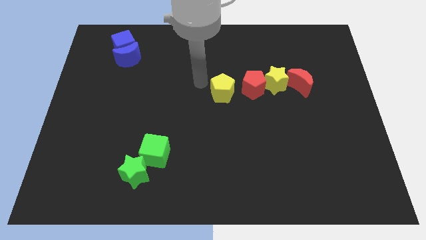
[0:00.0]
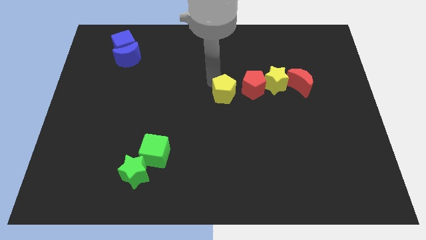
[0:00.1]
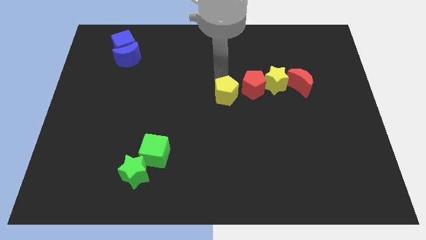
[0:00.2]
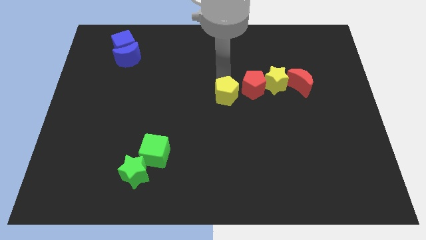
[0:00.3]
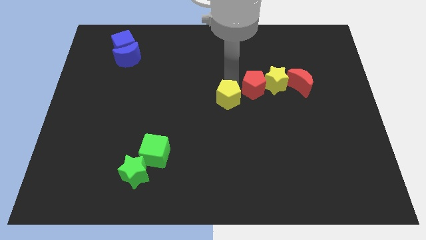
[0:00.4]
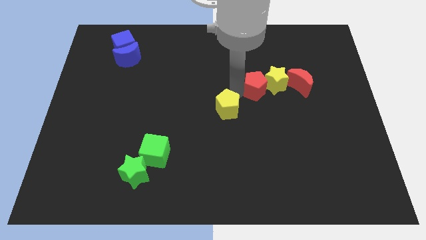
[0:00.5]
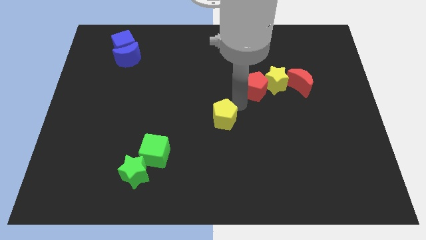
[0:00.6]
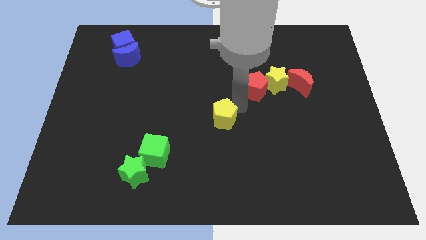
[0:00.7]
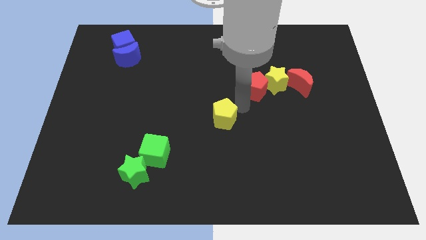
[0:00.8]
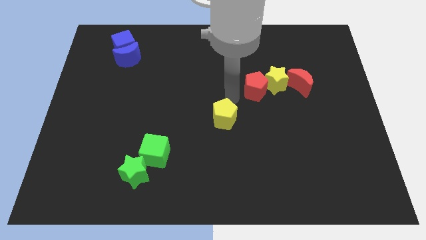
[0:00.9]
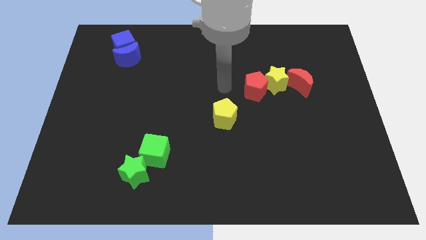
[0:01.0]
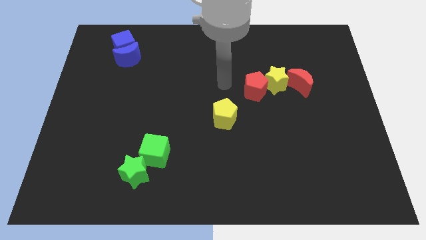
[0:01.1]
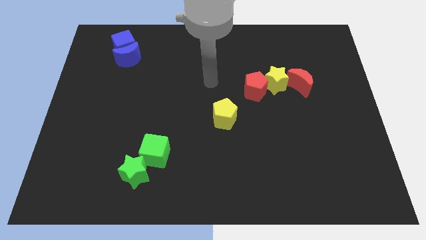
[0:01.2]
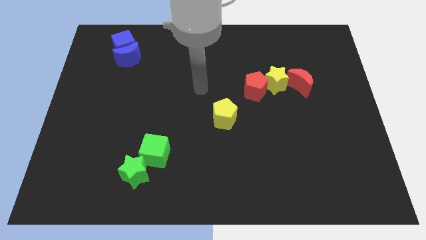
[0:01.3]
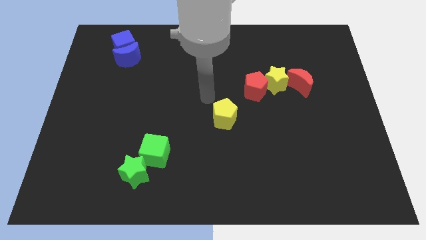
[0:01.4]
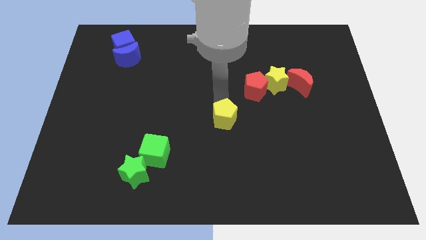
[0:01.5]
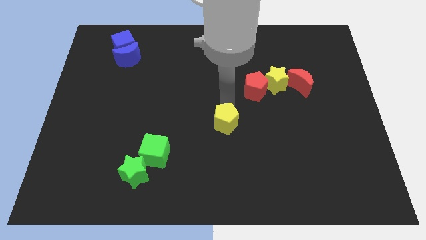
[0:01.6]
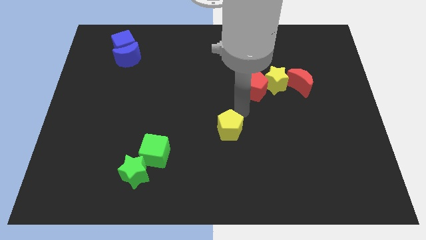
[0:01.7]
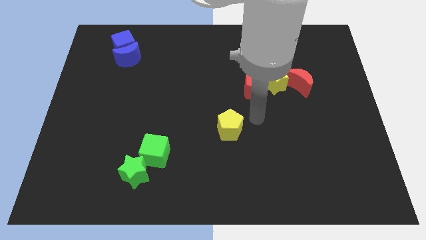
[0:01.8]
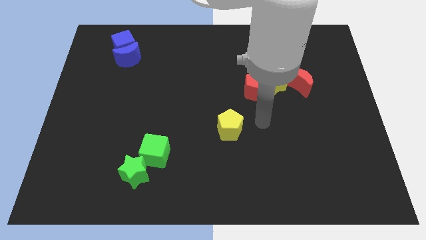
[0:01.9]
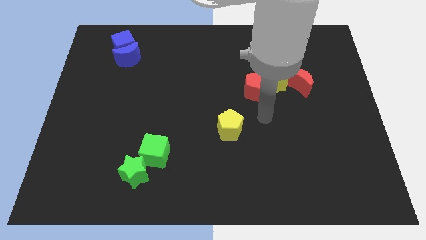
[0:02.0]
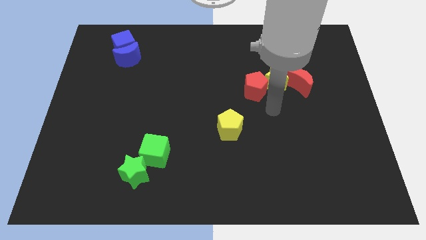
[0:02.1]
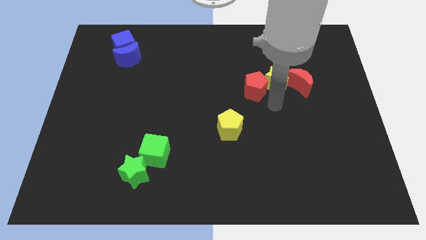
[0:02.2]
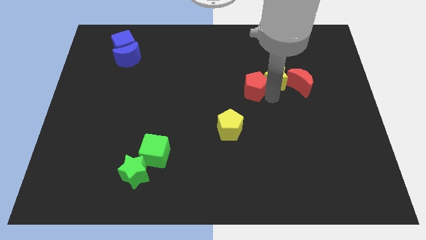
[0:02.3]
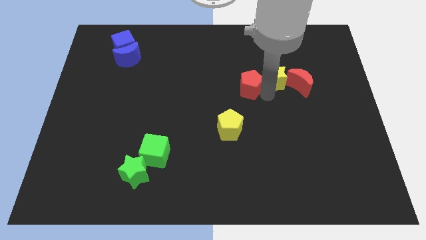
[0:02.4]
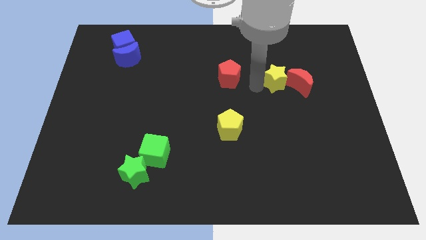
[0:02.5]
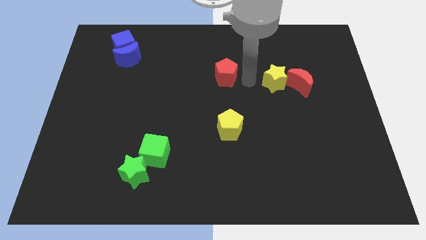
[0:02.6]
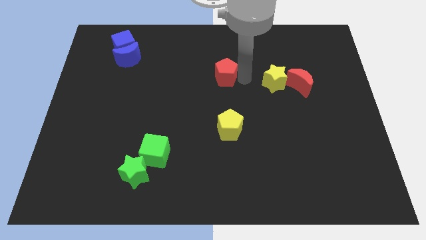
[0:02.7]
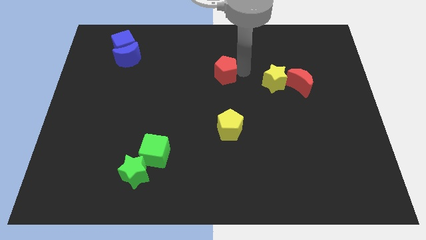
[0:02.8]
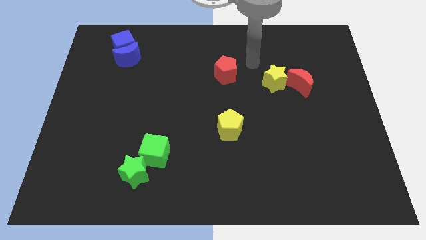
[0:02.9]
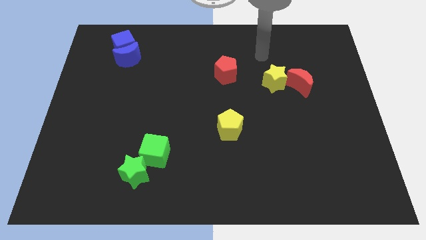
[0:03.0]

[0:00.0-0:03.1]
arrange yellow and red pentagons in a vertical line

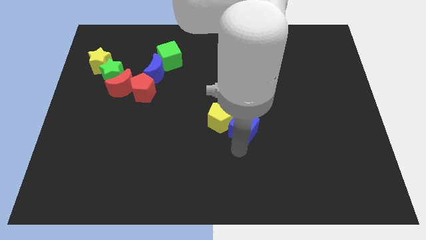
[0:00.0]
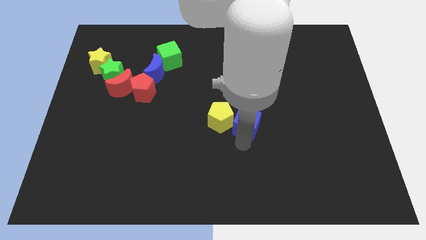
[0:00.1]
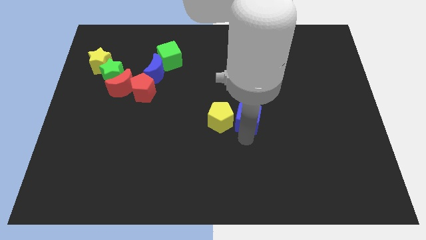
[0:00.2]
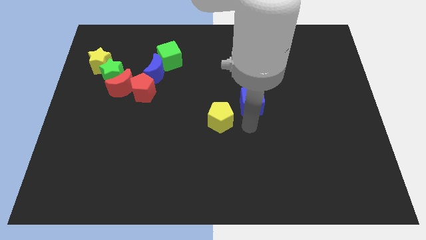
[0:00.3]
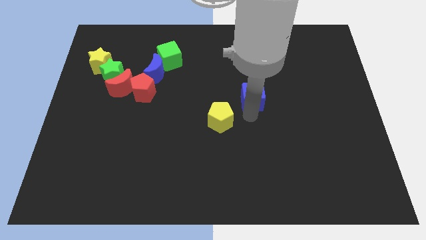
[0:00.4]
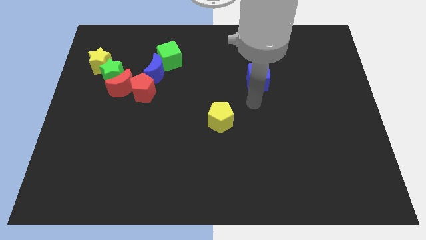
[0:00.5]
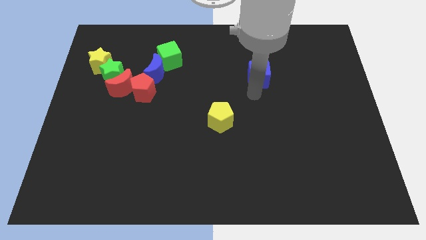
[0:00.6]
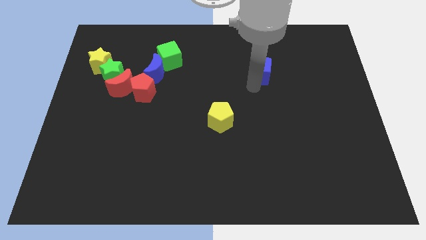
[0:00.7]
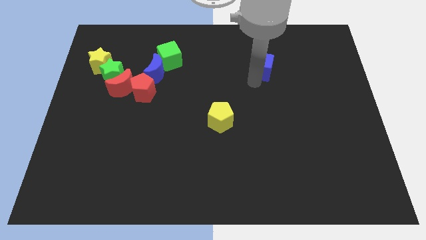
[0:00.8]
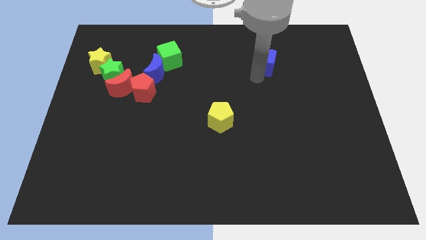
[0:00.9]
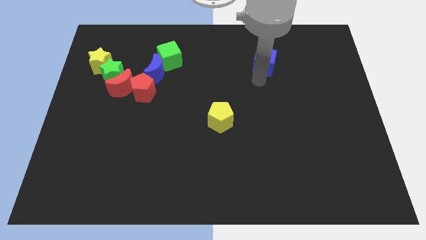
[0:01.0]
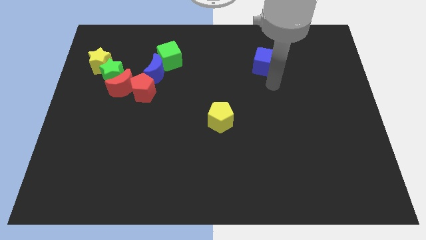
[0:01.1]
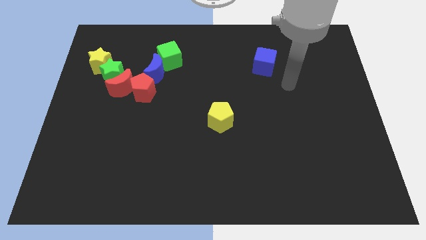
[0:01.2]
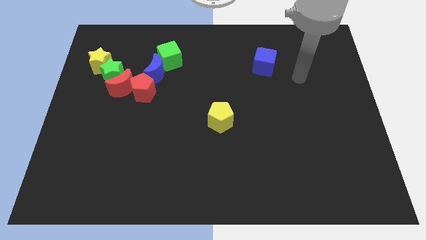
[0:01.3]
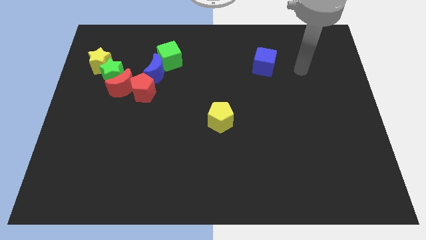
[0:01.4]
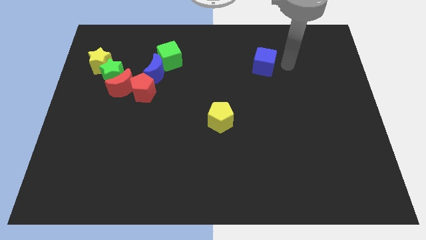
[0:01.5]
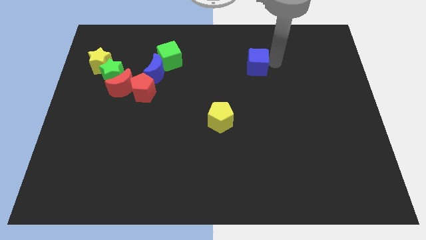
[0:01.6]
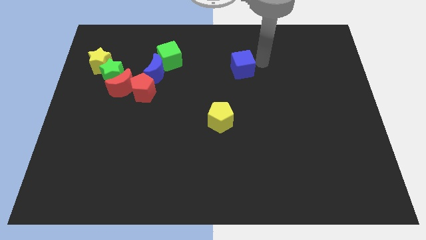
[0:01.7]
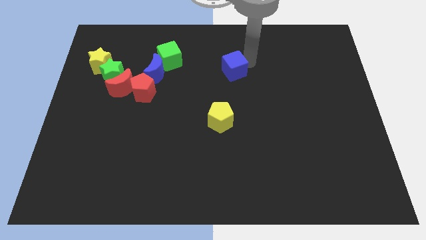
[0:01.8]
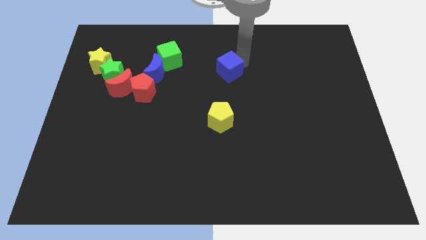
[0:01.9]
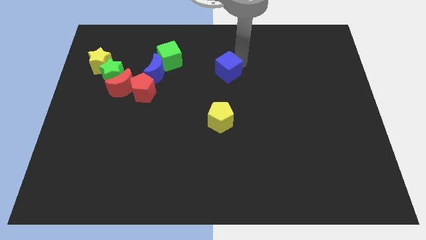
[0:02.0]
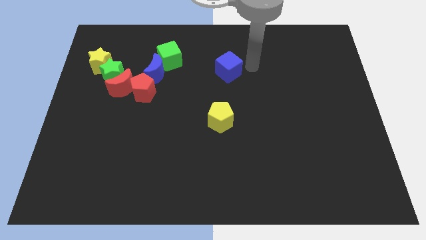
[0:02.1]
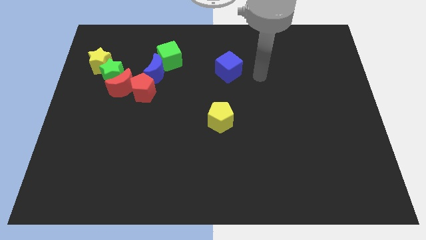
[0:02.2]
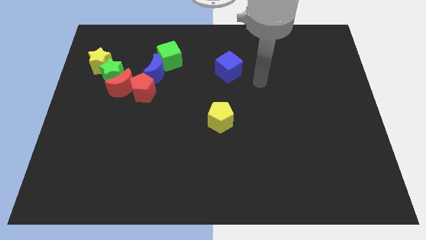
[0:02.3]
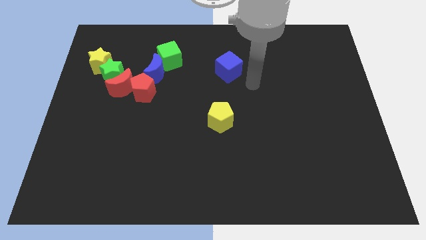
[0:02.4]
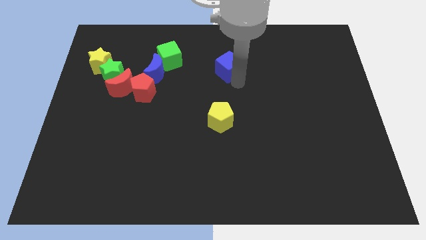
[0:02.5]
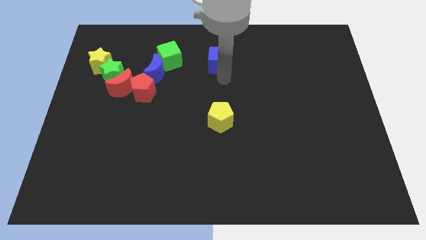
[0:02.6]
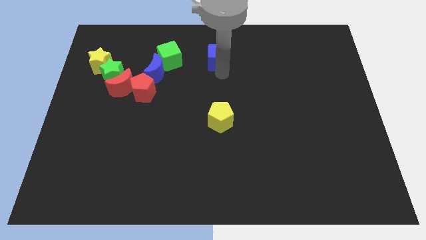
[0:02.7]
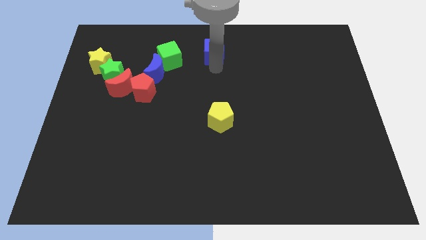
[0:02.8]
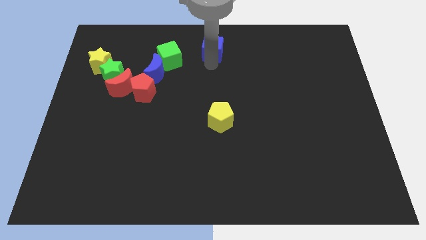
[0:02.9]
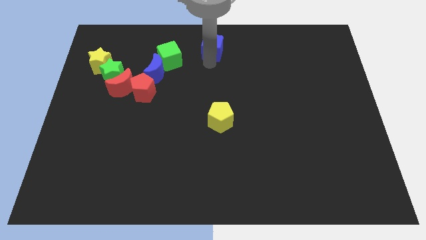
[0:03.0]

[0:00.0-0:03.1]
separate blue cube from yellow pentagon

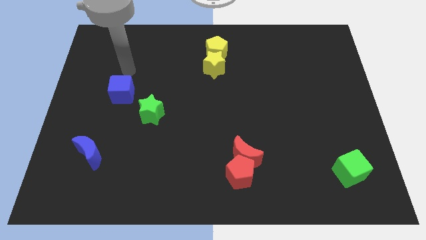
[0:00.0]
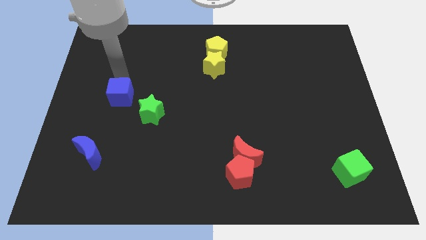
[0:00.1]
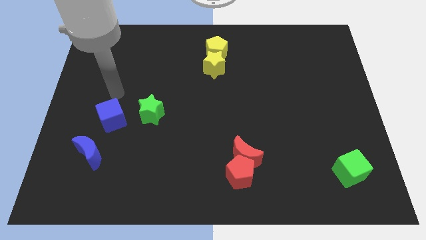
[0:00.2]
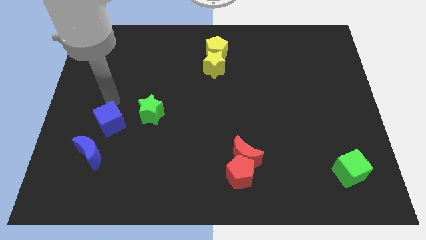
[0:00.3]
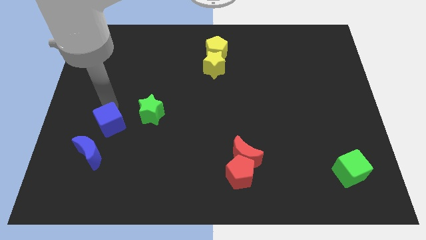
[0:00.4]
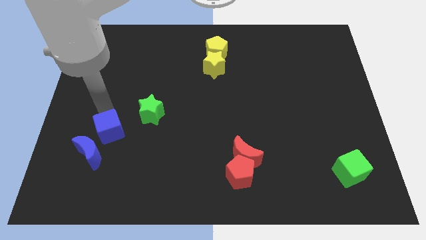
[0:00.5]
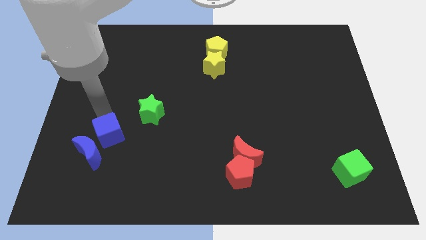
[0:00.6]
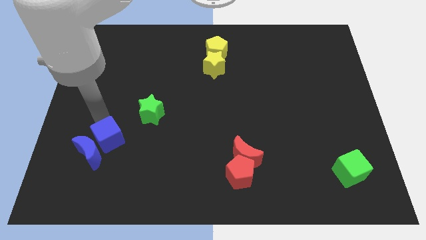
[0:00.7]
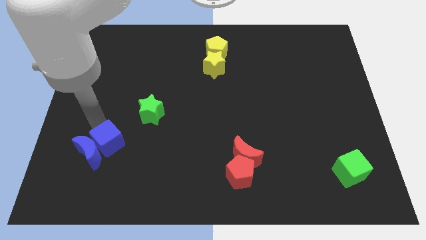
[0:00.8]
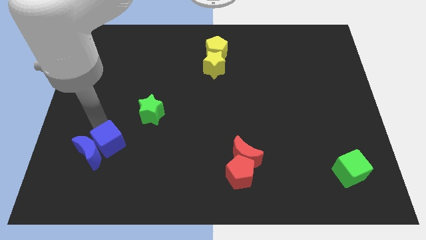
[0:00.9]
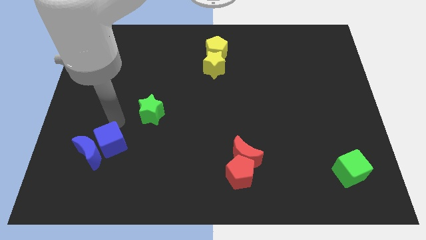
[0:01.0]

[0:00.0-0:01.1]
place the blue cube near to the blue crescent

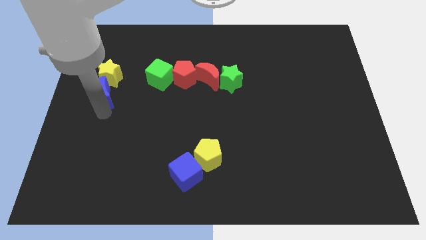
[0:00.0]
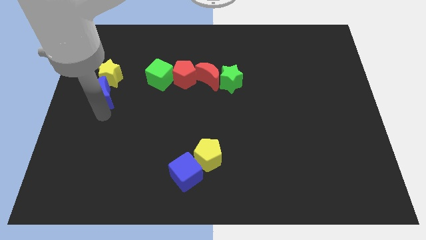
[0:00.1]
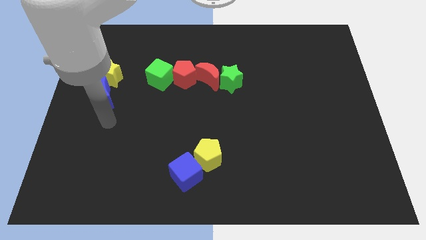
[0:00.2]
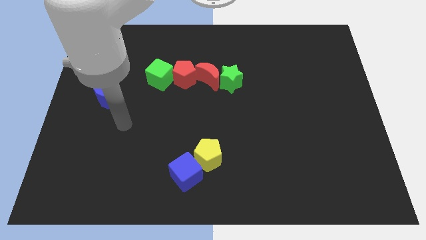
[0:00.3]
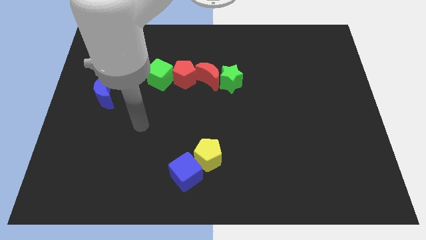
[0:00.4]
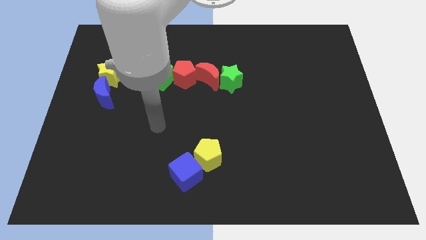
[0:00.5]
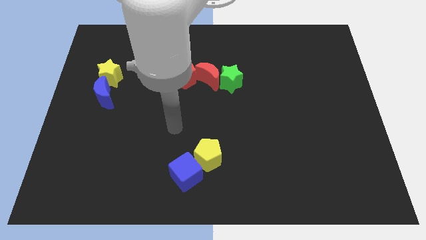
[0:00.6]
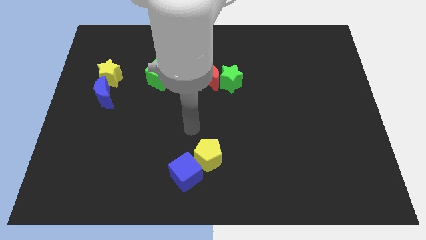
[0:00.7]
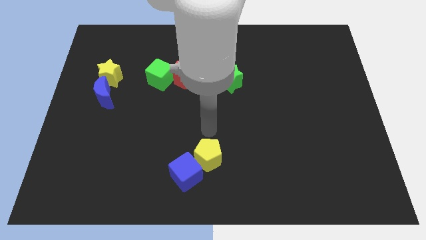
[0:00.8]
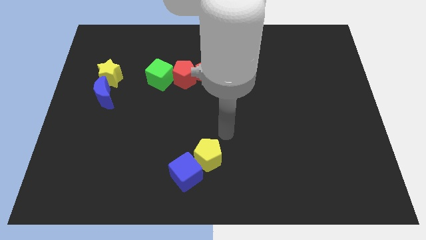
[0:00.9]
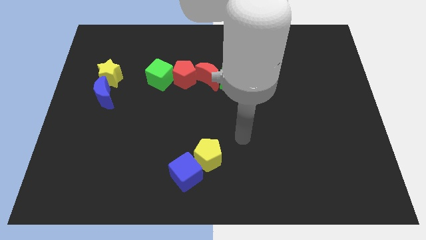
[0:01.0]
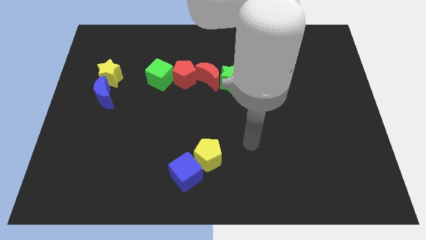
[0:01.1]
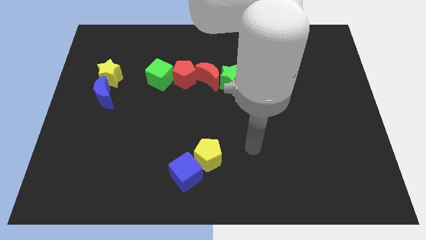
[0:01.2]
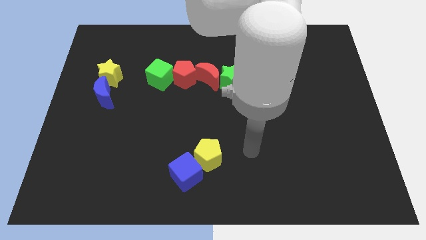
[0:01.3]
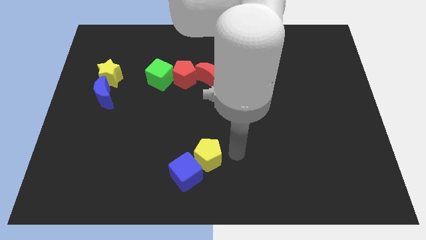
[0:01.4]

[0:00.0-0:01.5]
move your arm away from the blue moon
